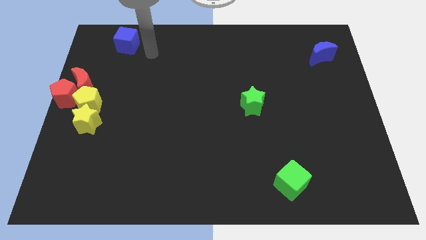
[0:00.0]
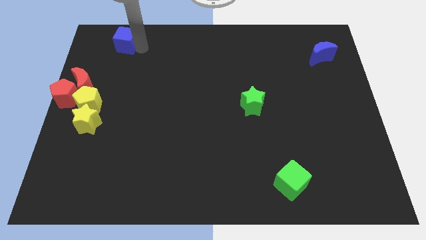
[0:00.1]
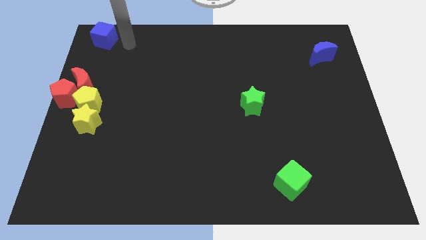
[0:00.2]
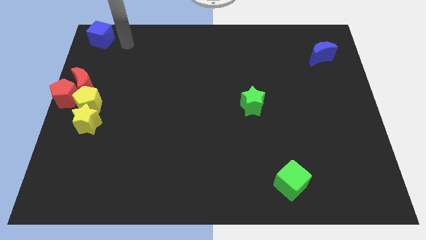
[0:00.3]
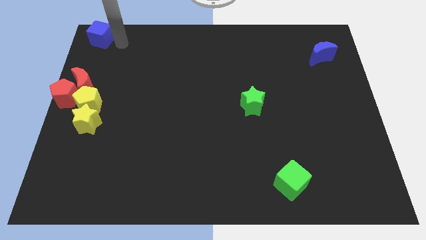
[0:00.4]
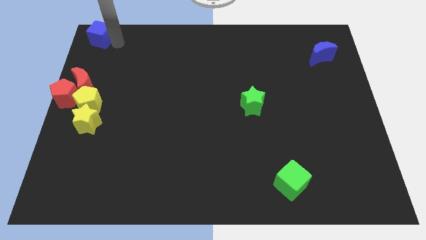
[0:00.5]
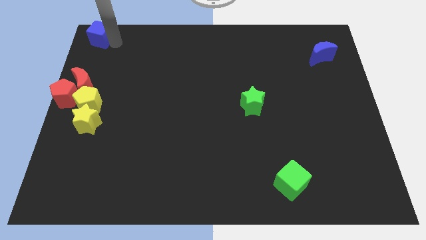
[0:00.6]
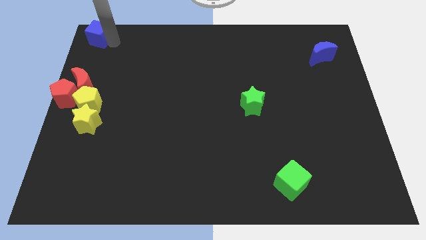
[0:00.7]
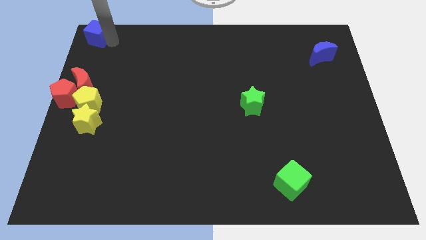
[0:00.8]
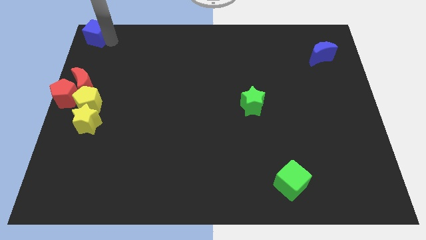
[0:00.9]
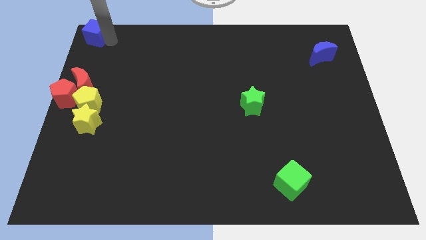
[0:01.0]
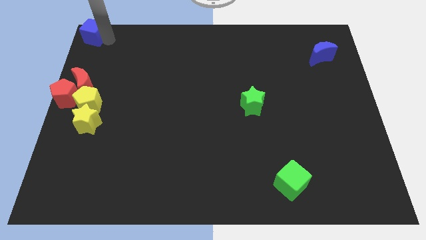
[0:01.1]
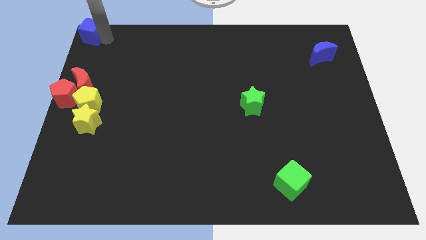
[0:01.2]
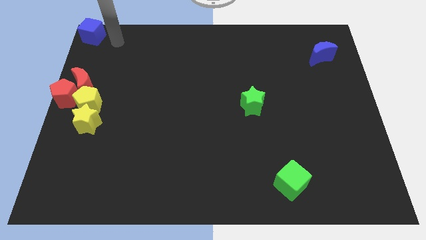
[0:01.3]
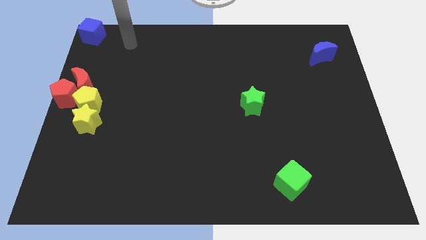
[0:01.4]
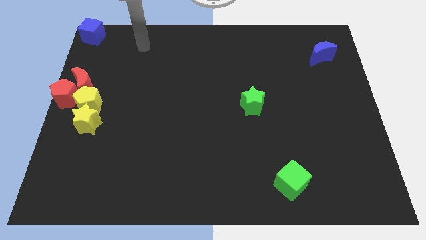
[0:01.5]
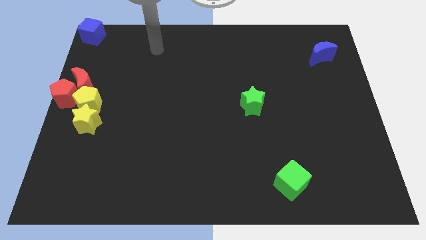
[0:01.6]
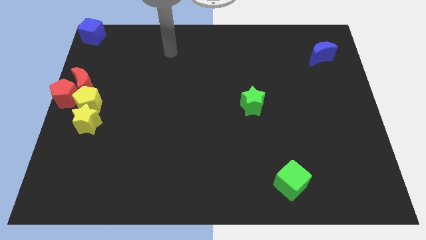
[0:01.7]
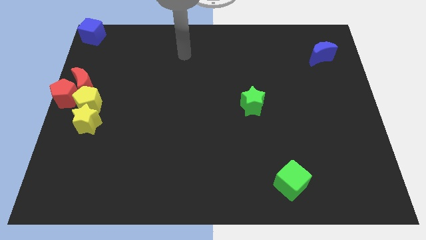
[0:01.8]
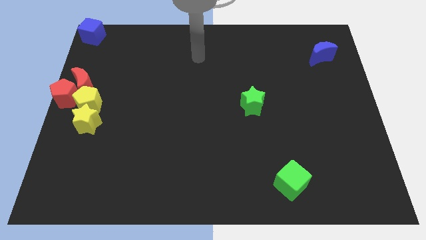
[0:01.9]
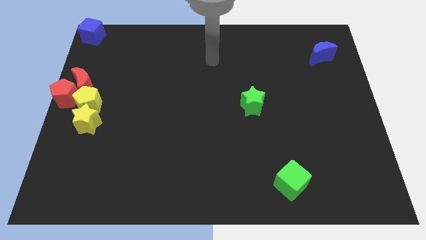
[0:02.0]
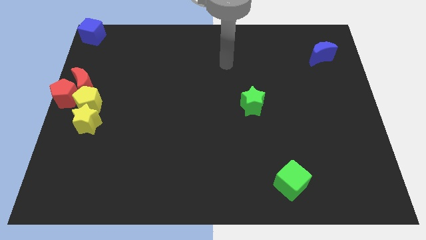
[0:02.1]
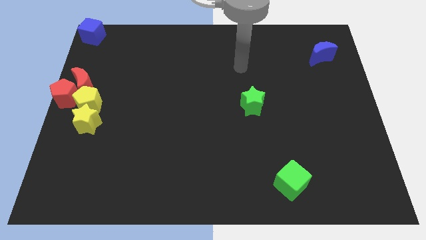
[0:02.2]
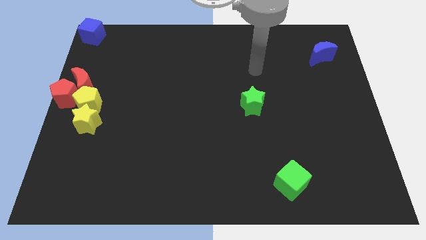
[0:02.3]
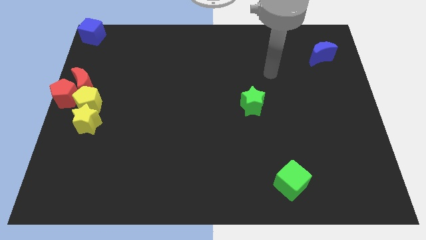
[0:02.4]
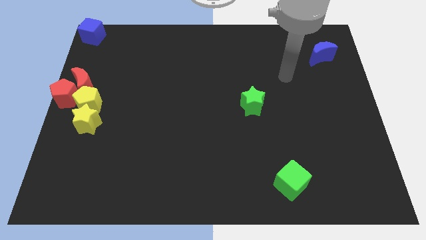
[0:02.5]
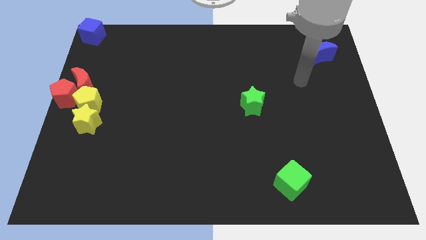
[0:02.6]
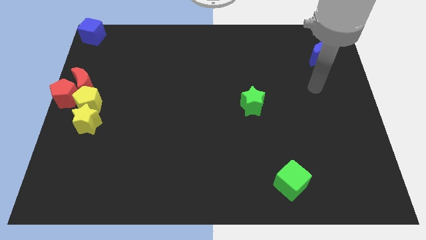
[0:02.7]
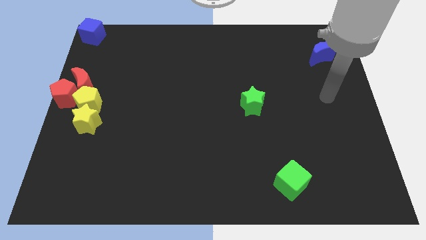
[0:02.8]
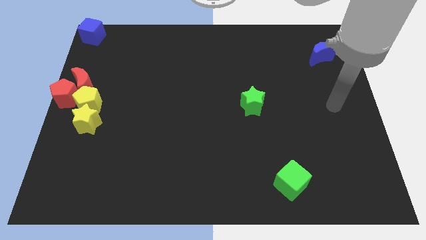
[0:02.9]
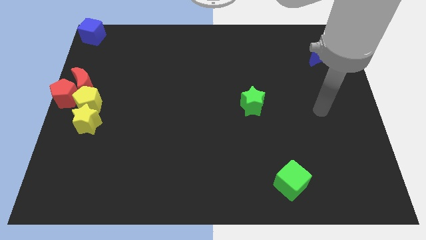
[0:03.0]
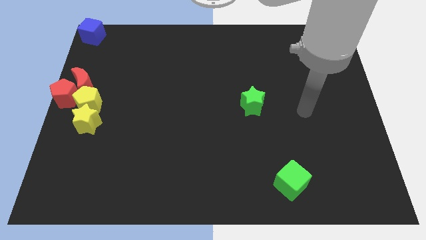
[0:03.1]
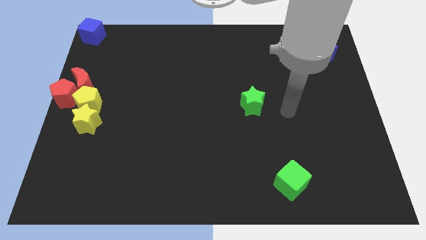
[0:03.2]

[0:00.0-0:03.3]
adjust the blue cube at the top left corner of the board

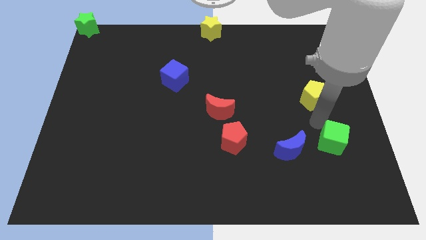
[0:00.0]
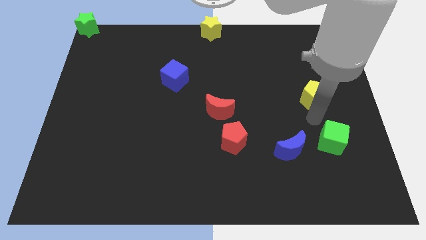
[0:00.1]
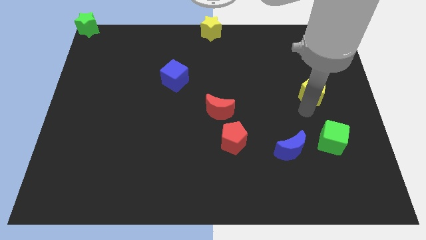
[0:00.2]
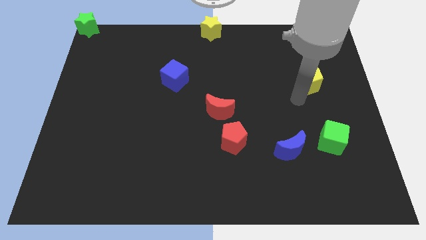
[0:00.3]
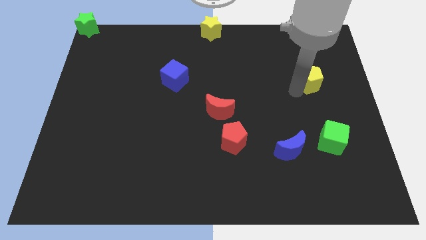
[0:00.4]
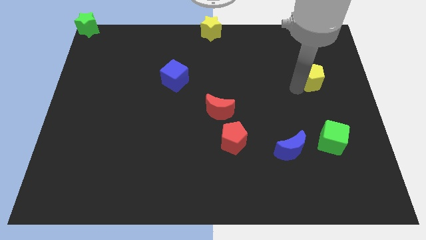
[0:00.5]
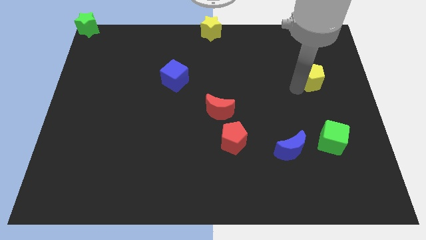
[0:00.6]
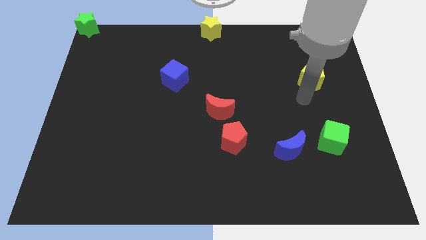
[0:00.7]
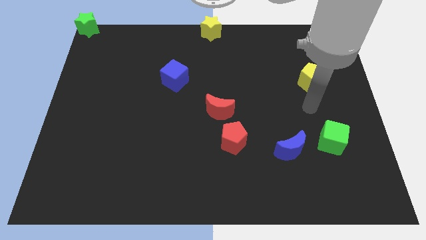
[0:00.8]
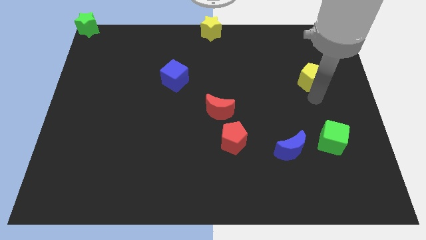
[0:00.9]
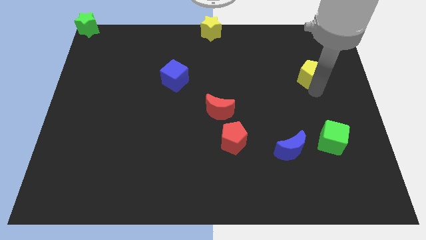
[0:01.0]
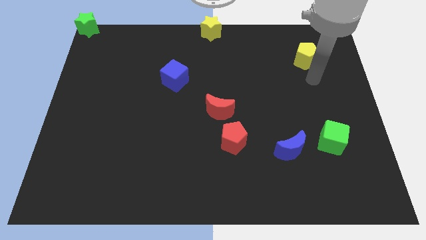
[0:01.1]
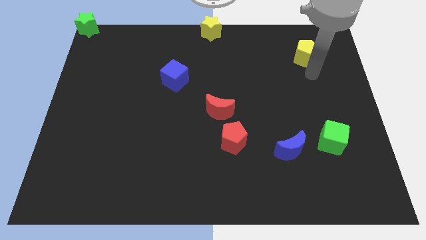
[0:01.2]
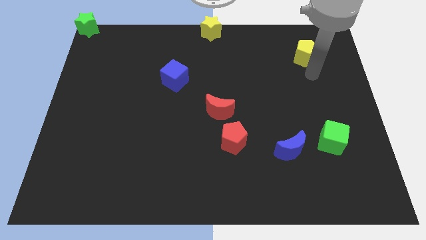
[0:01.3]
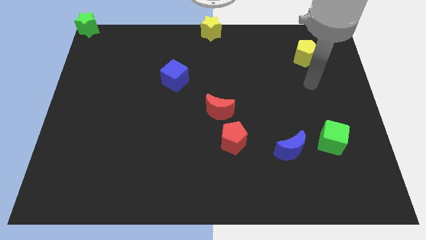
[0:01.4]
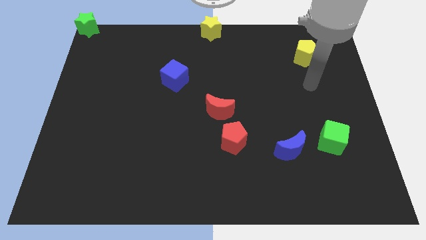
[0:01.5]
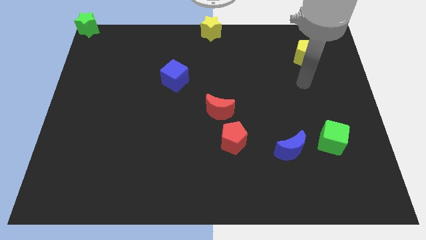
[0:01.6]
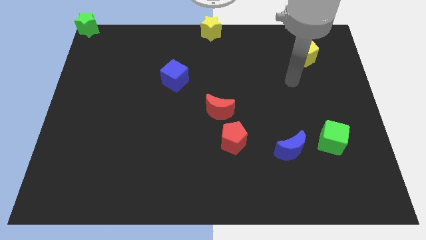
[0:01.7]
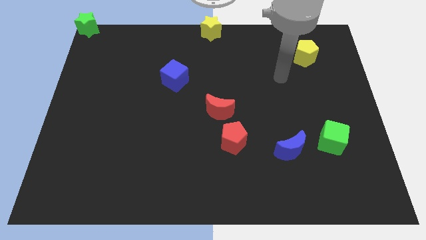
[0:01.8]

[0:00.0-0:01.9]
push the yellow pentagon to the top

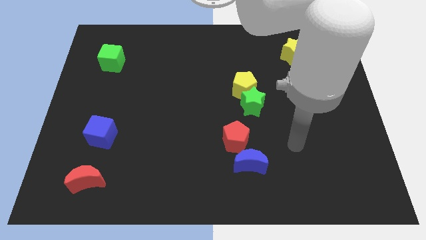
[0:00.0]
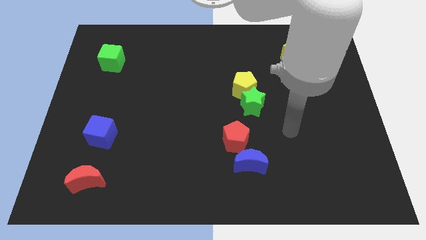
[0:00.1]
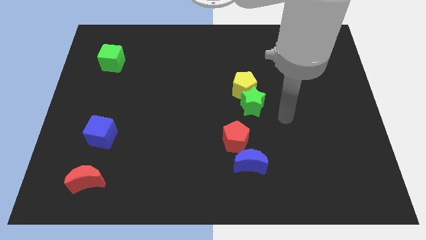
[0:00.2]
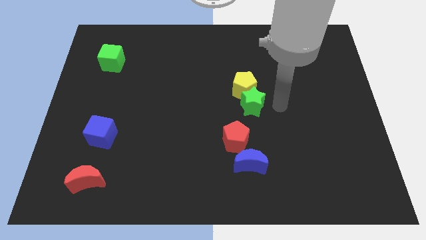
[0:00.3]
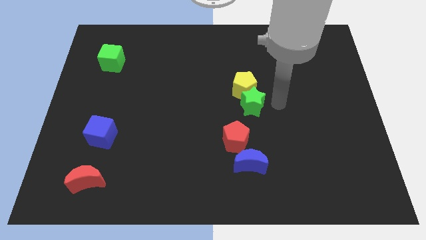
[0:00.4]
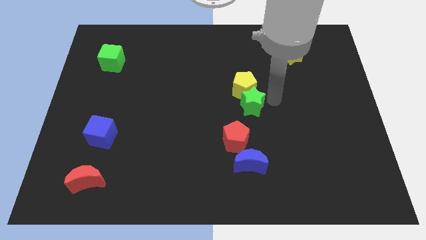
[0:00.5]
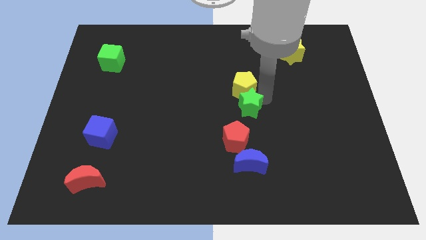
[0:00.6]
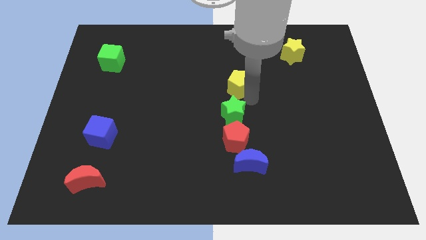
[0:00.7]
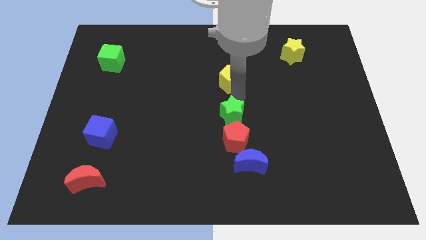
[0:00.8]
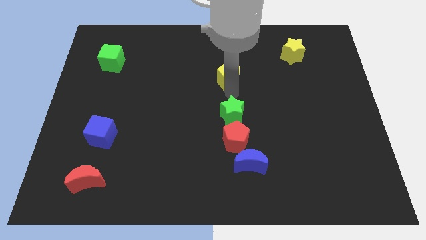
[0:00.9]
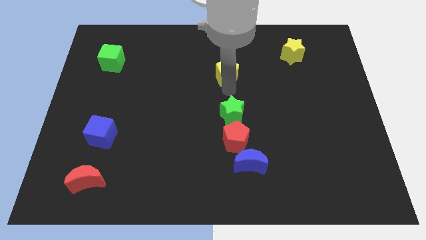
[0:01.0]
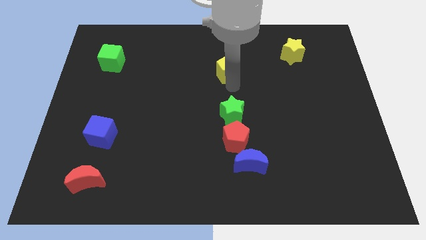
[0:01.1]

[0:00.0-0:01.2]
separate the yellow pentagon from the green star

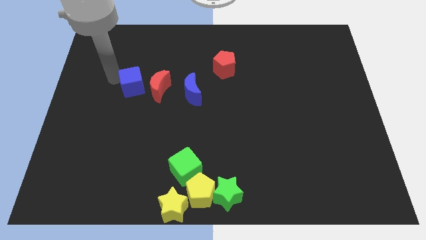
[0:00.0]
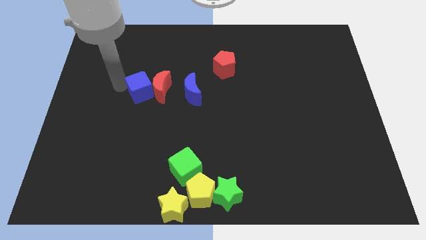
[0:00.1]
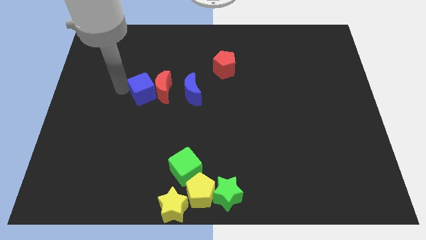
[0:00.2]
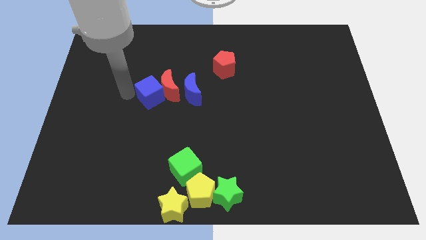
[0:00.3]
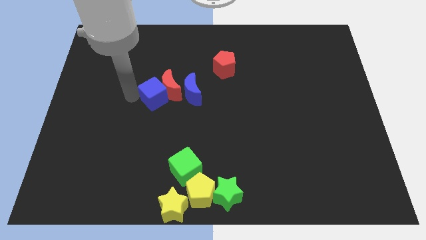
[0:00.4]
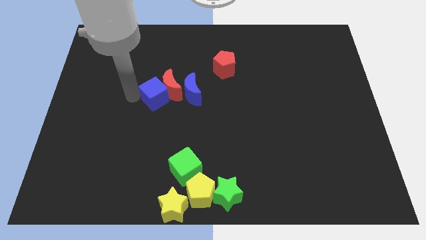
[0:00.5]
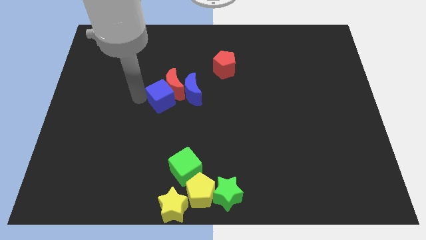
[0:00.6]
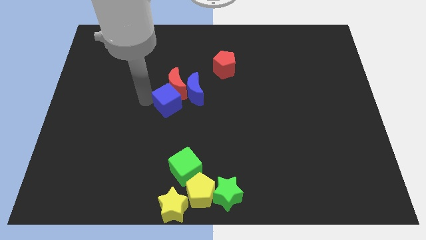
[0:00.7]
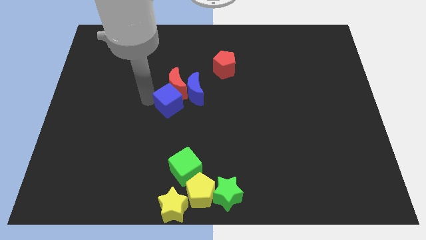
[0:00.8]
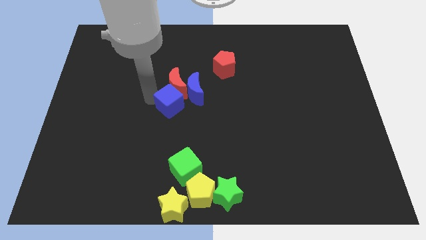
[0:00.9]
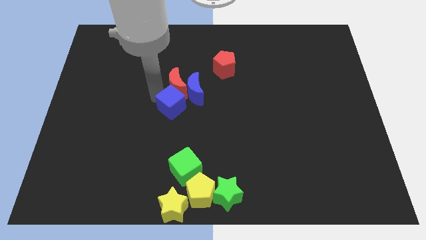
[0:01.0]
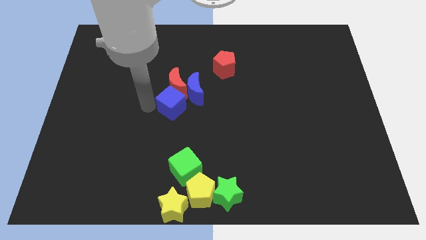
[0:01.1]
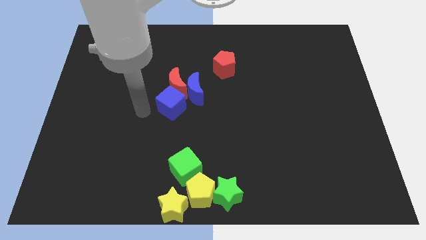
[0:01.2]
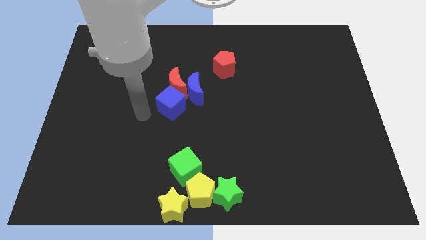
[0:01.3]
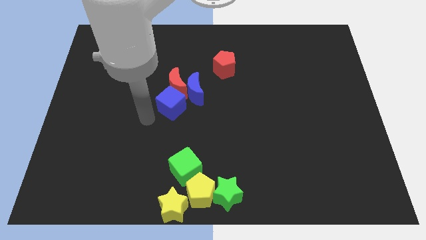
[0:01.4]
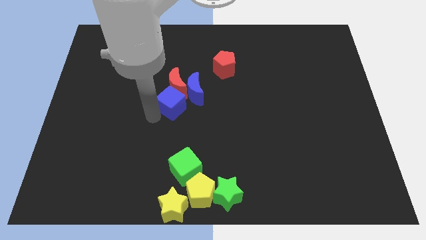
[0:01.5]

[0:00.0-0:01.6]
move blue cube below red moon

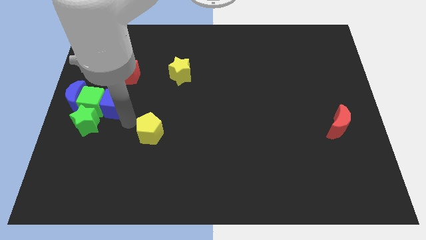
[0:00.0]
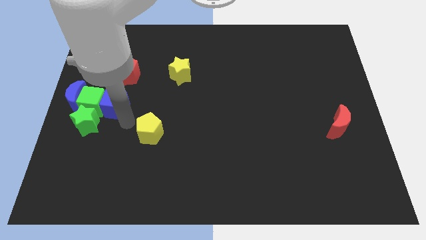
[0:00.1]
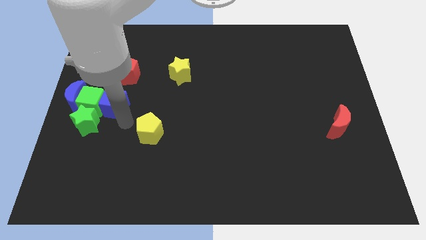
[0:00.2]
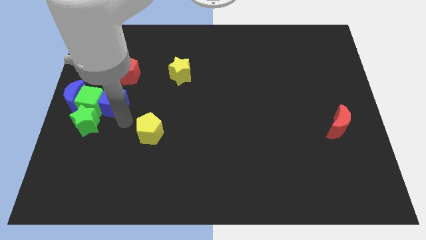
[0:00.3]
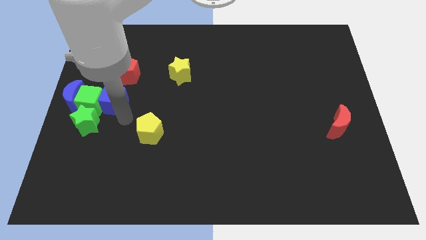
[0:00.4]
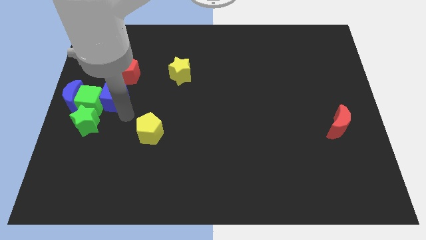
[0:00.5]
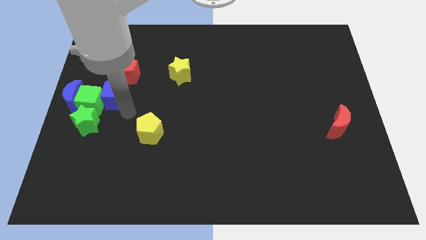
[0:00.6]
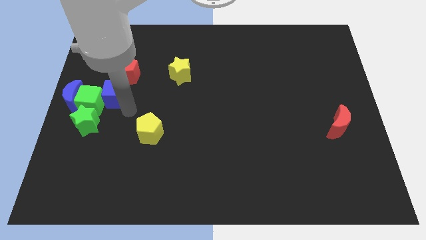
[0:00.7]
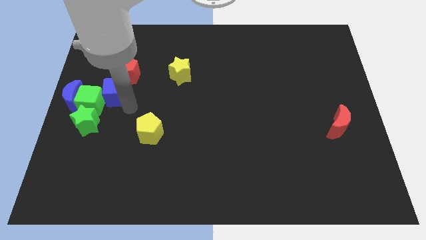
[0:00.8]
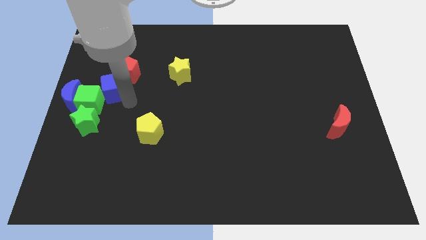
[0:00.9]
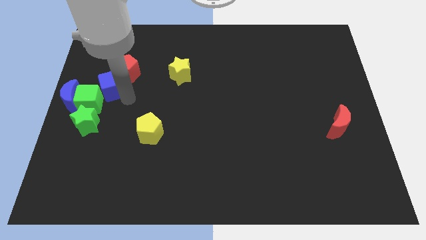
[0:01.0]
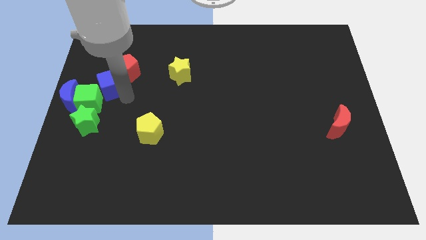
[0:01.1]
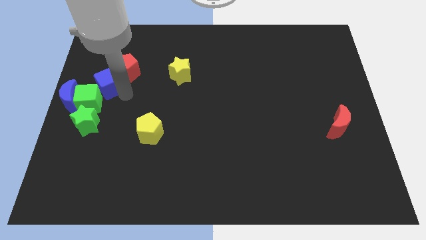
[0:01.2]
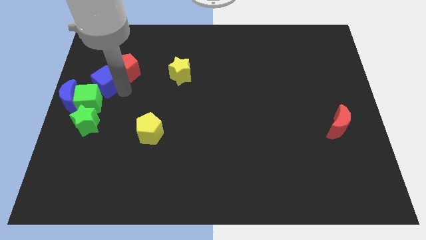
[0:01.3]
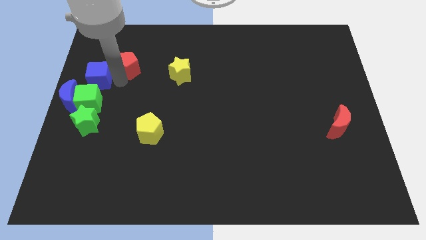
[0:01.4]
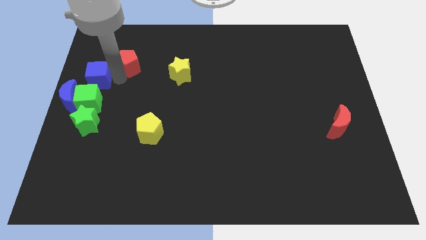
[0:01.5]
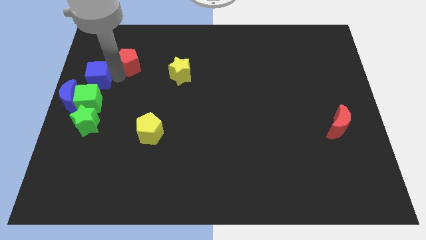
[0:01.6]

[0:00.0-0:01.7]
move the blue cube above the green cube
